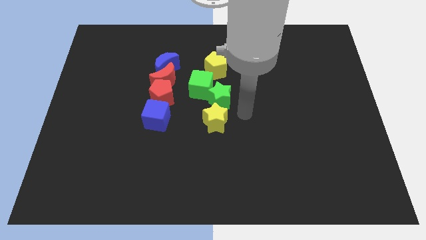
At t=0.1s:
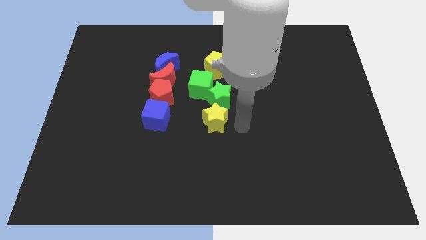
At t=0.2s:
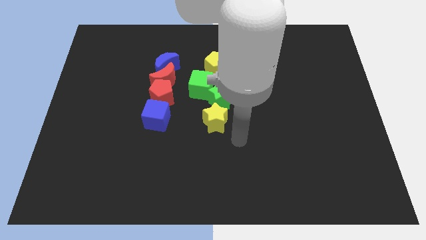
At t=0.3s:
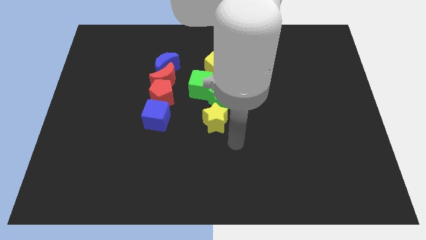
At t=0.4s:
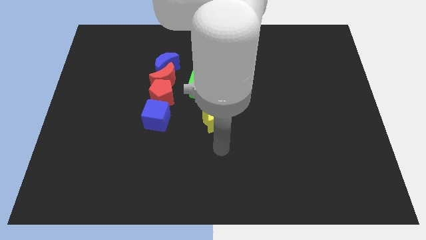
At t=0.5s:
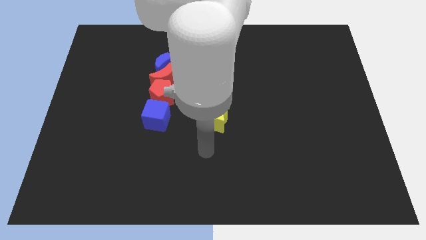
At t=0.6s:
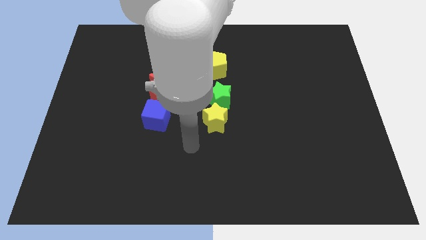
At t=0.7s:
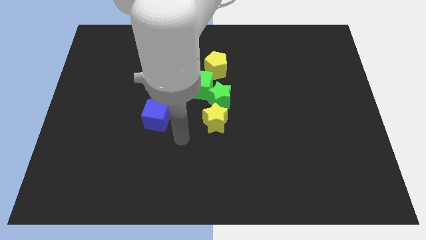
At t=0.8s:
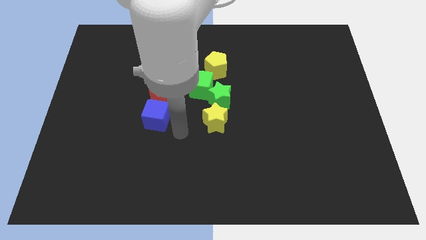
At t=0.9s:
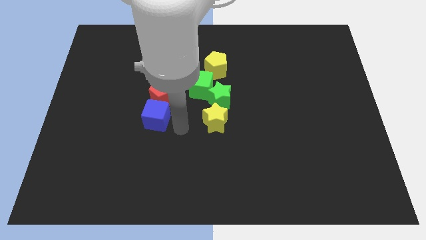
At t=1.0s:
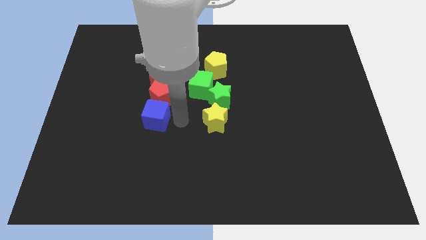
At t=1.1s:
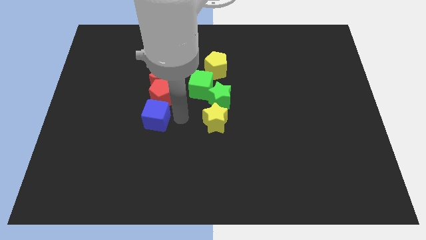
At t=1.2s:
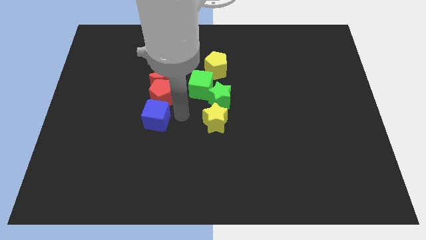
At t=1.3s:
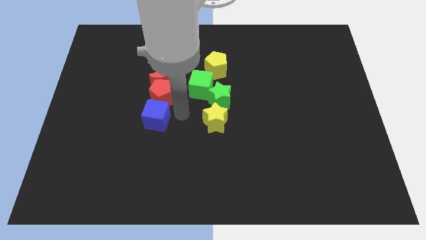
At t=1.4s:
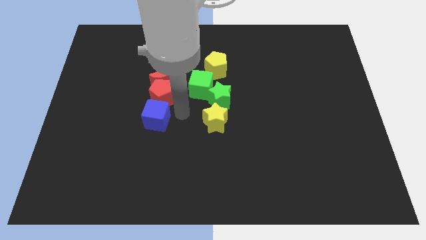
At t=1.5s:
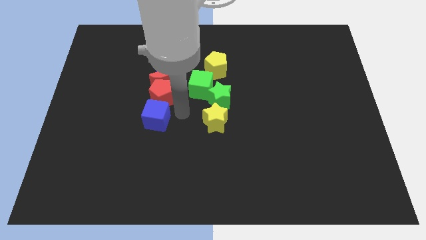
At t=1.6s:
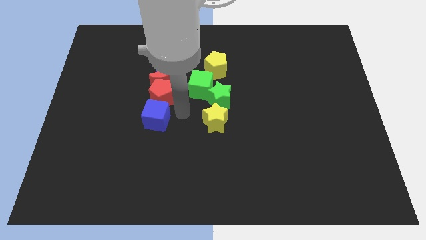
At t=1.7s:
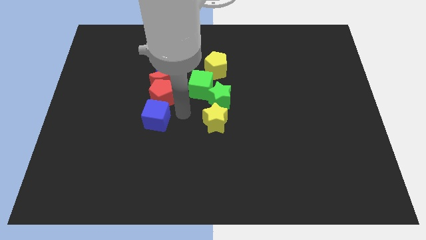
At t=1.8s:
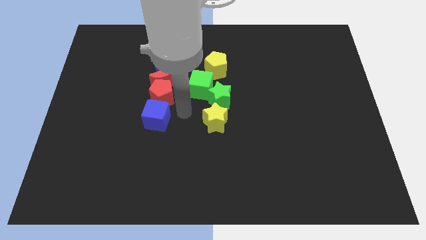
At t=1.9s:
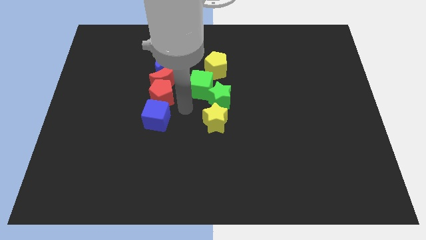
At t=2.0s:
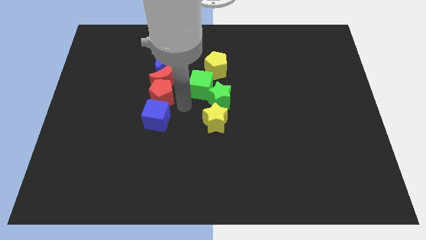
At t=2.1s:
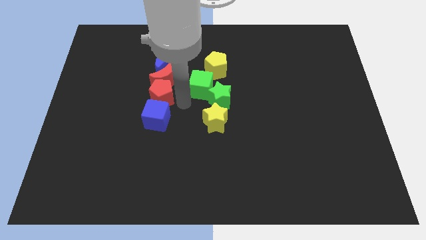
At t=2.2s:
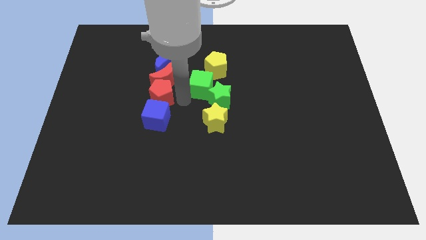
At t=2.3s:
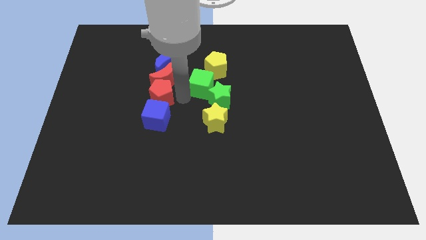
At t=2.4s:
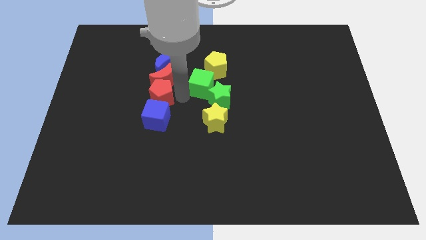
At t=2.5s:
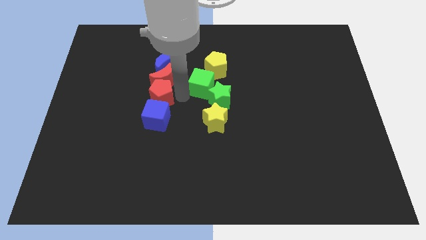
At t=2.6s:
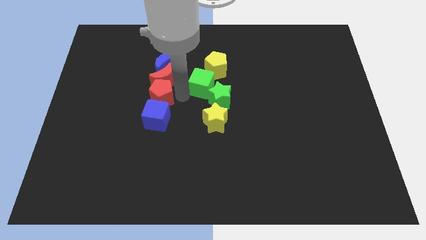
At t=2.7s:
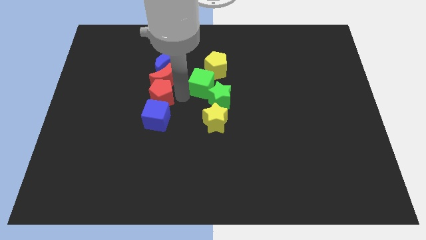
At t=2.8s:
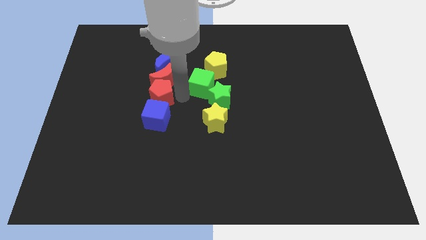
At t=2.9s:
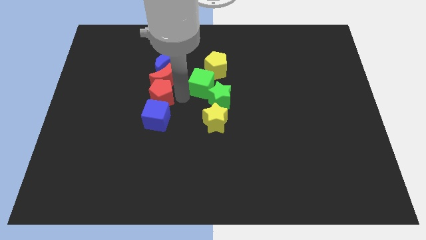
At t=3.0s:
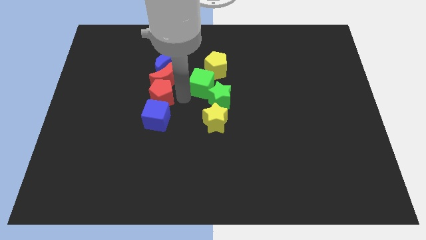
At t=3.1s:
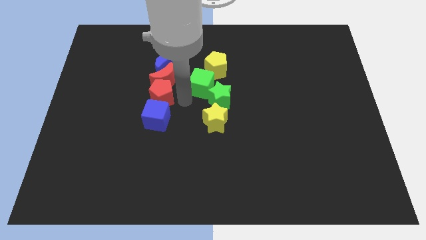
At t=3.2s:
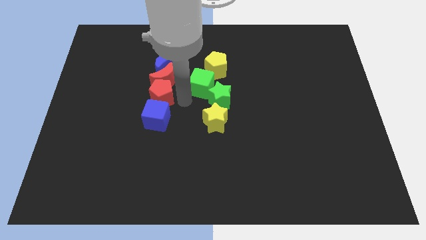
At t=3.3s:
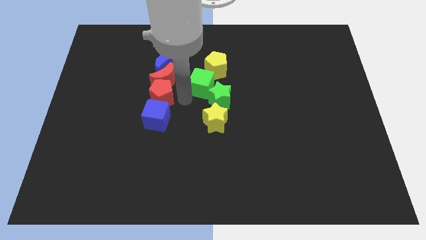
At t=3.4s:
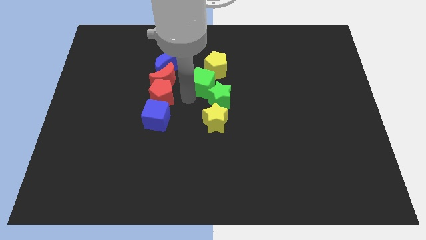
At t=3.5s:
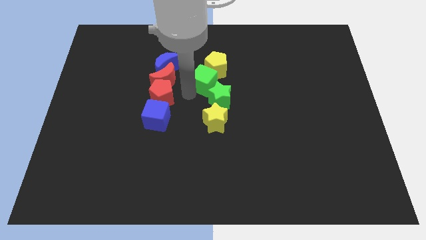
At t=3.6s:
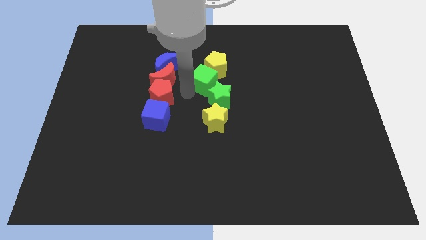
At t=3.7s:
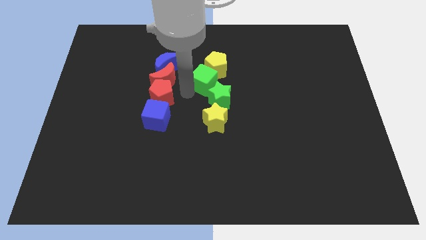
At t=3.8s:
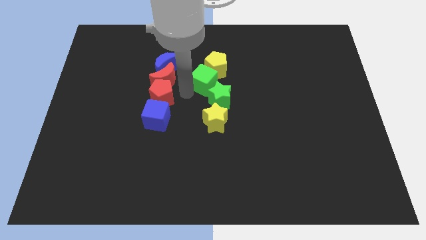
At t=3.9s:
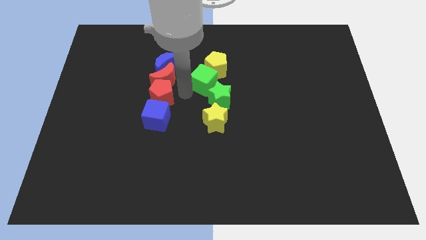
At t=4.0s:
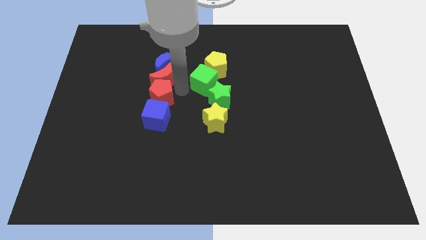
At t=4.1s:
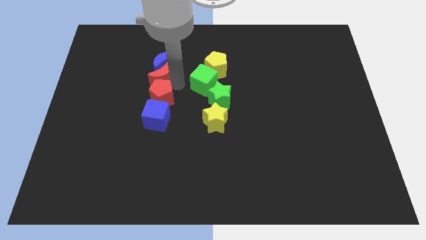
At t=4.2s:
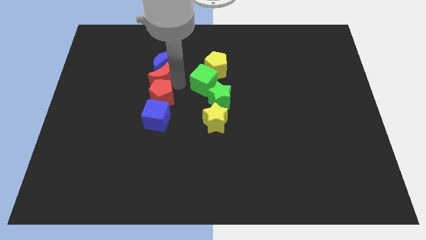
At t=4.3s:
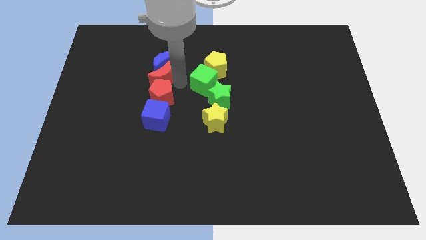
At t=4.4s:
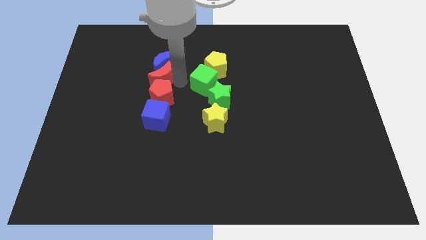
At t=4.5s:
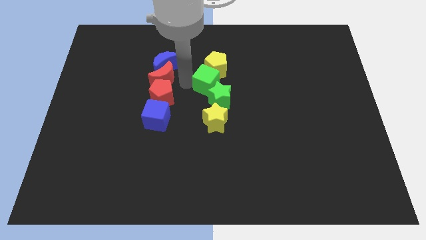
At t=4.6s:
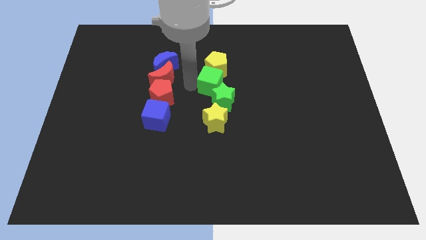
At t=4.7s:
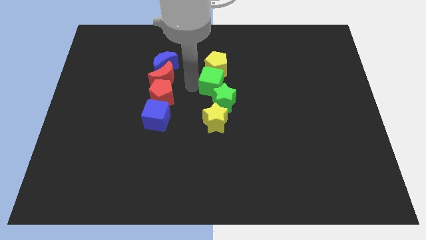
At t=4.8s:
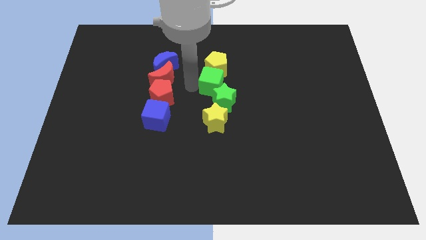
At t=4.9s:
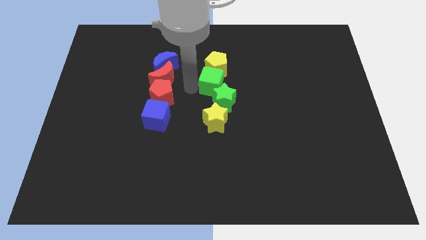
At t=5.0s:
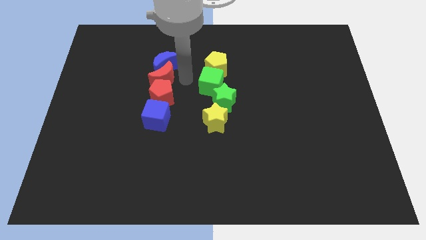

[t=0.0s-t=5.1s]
push the green cube in between the green star and yellow pentagon

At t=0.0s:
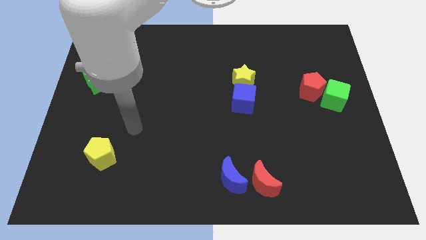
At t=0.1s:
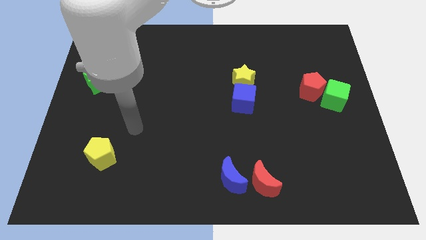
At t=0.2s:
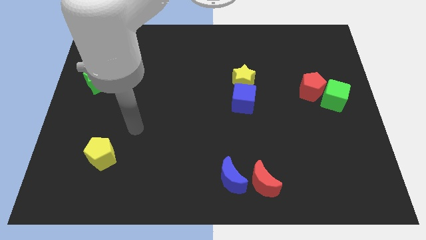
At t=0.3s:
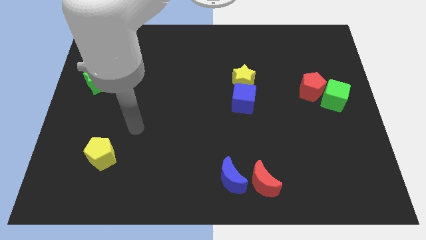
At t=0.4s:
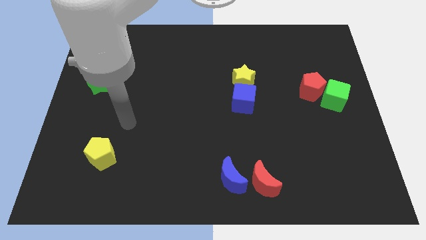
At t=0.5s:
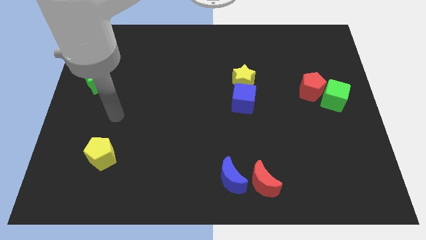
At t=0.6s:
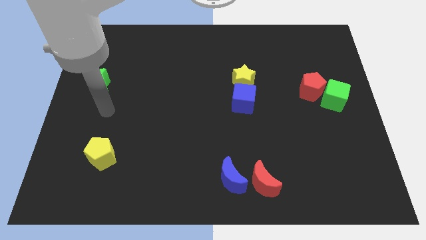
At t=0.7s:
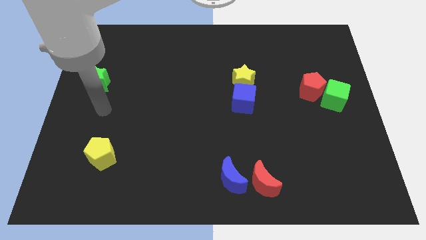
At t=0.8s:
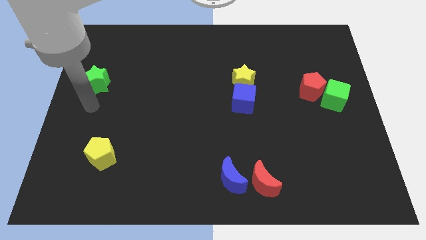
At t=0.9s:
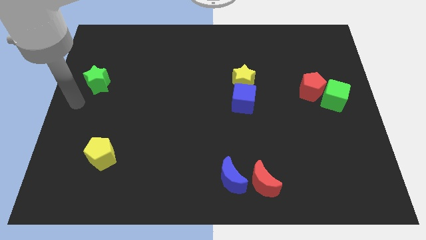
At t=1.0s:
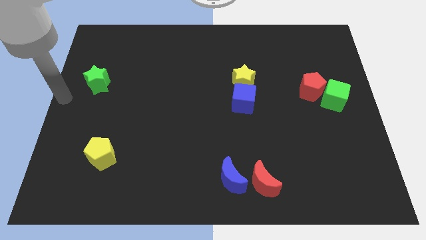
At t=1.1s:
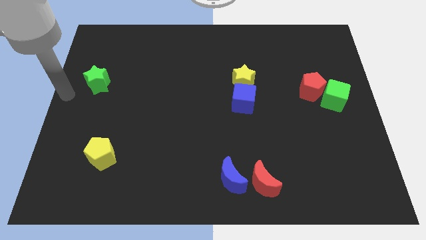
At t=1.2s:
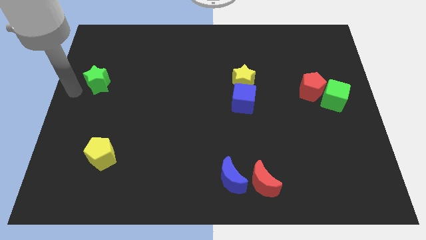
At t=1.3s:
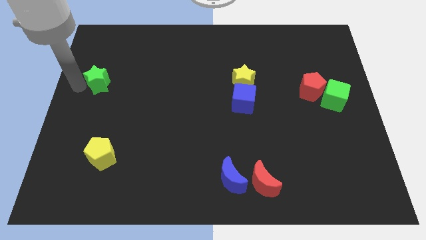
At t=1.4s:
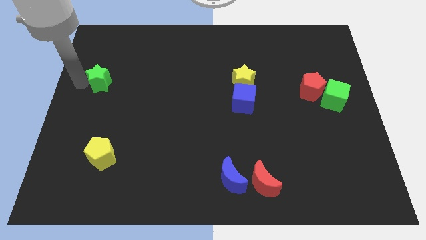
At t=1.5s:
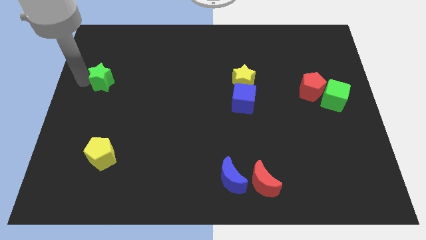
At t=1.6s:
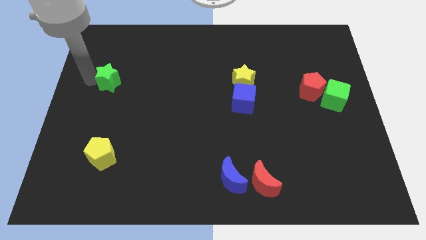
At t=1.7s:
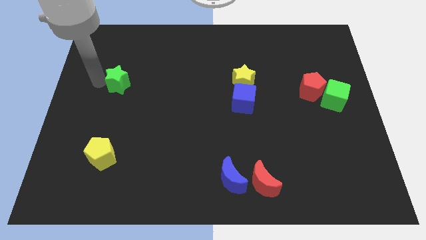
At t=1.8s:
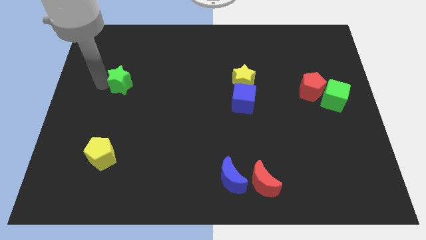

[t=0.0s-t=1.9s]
slightly push the green star to the right side

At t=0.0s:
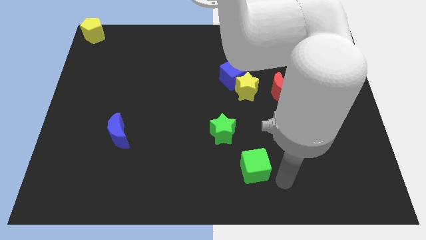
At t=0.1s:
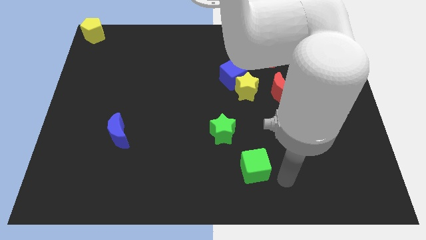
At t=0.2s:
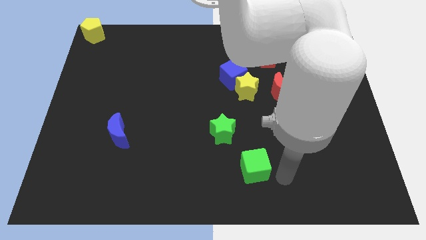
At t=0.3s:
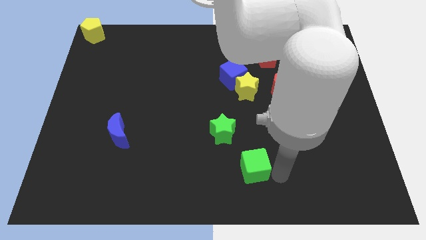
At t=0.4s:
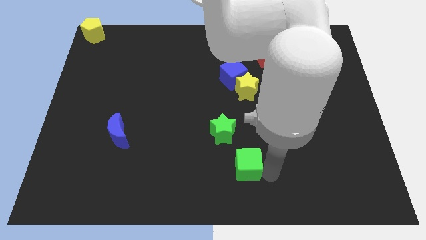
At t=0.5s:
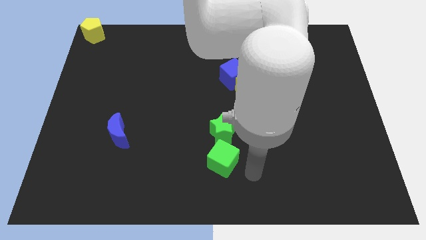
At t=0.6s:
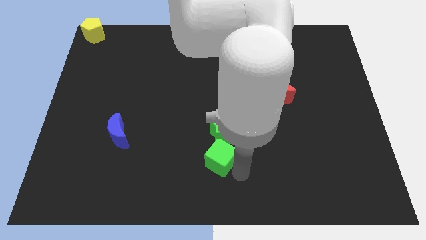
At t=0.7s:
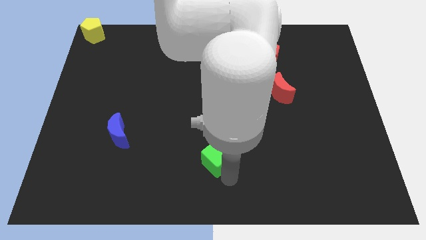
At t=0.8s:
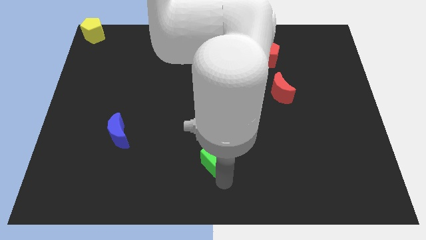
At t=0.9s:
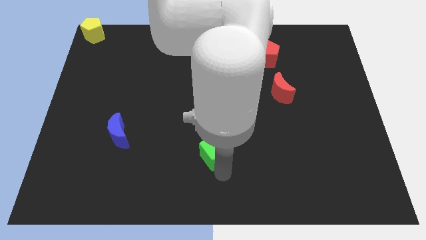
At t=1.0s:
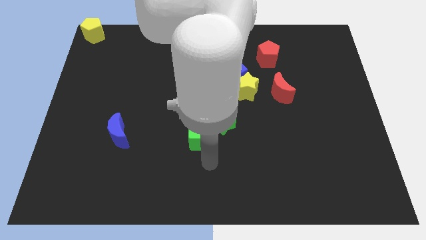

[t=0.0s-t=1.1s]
place green cube to the bottom left of green star

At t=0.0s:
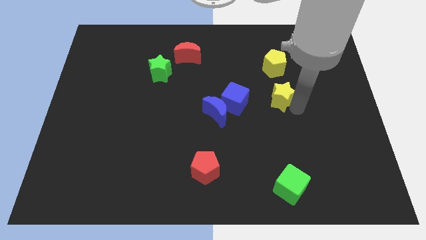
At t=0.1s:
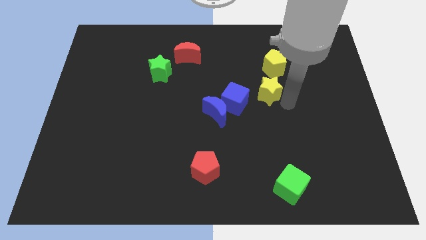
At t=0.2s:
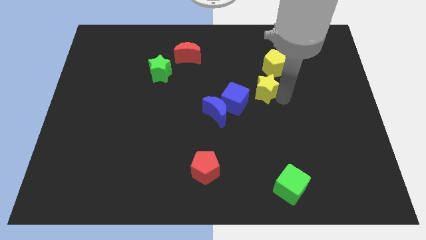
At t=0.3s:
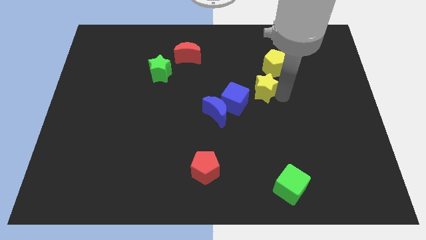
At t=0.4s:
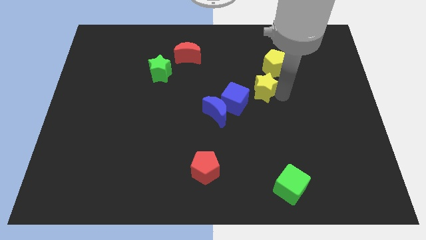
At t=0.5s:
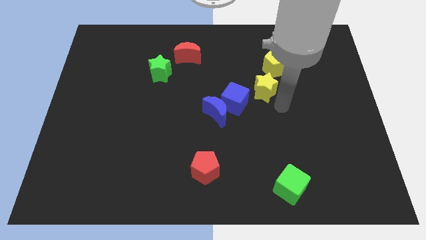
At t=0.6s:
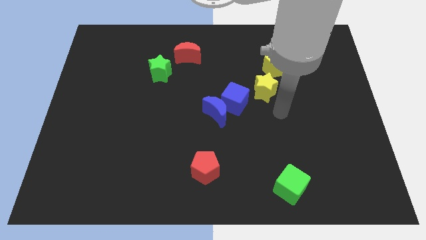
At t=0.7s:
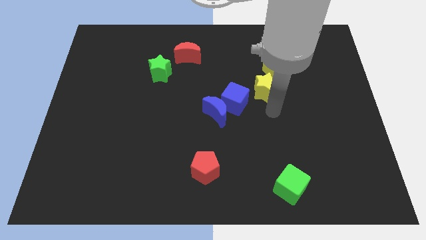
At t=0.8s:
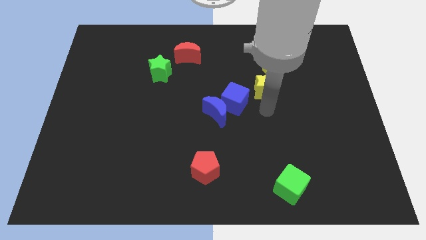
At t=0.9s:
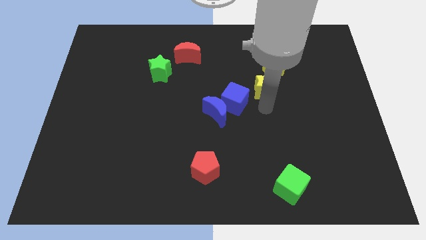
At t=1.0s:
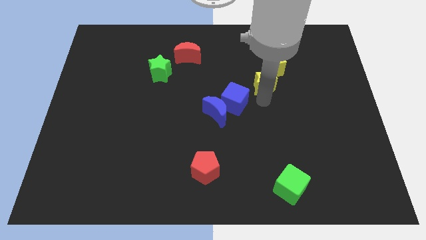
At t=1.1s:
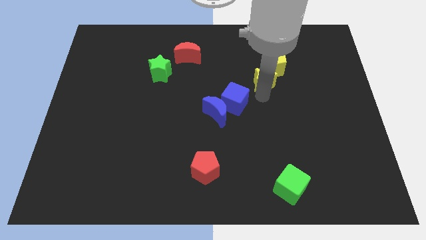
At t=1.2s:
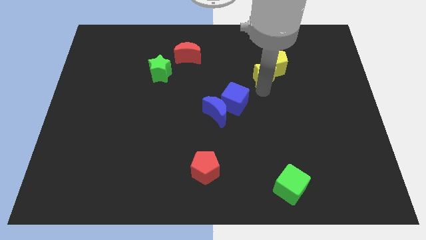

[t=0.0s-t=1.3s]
move the yellow star below into the yellow pentagon
